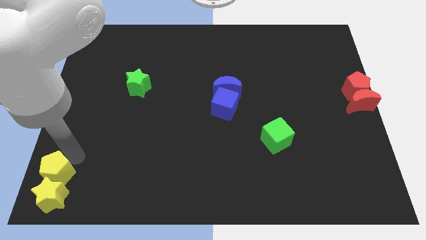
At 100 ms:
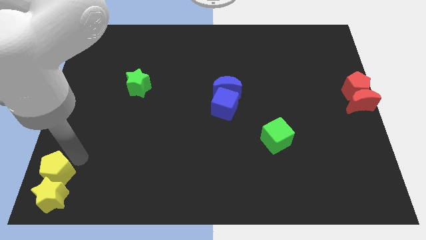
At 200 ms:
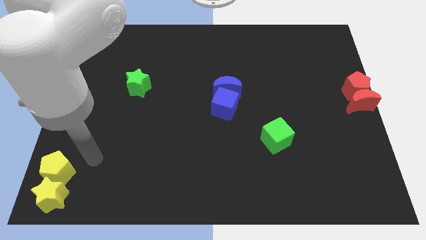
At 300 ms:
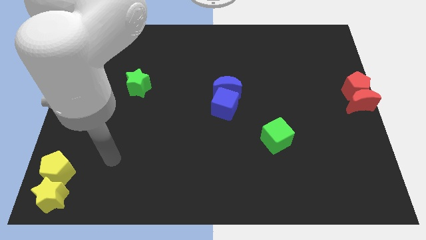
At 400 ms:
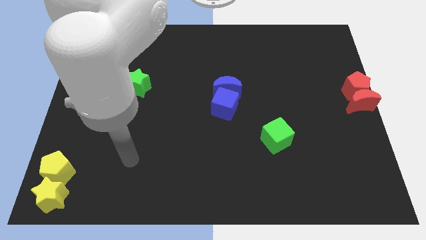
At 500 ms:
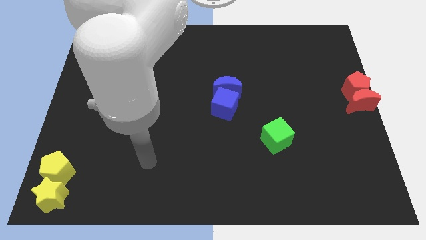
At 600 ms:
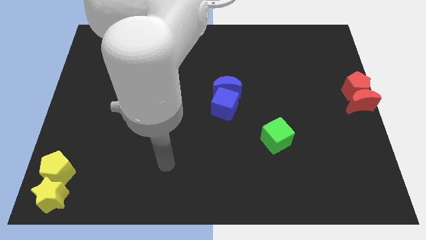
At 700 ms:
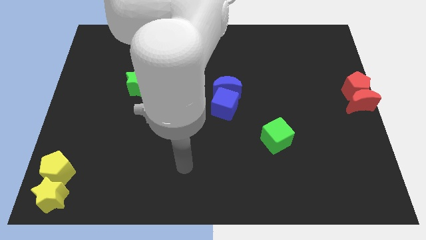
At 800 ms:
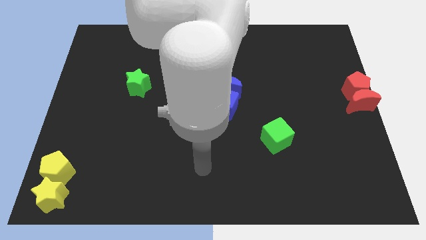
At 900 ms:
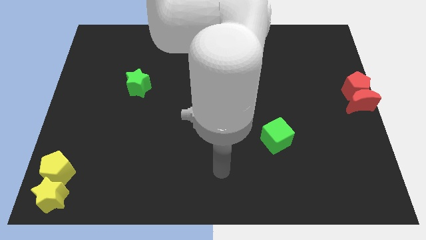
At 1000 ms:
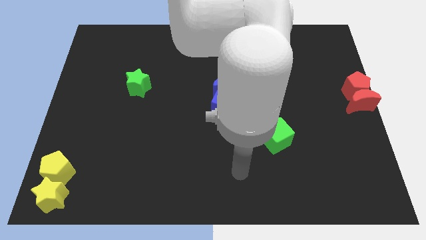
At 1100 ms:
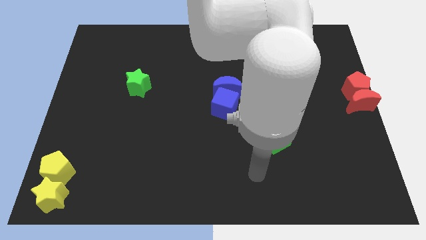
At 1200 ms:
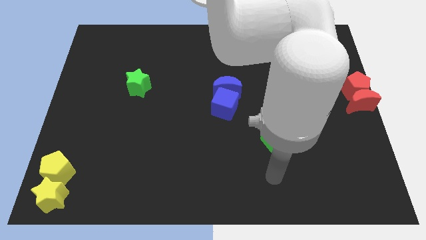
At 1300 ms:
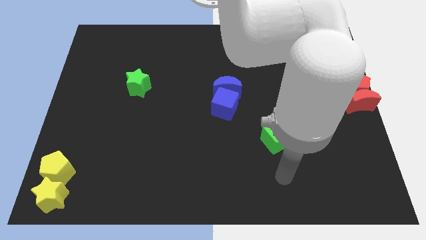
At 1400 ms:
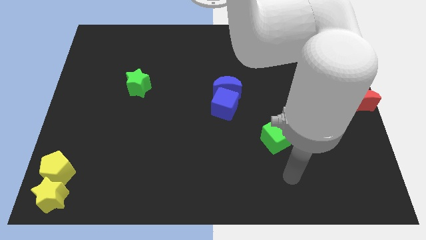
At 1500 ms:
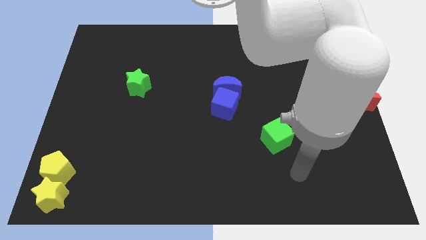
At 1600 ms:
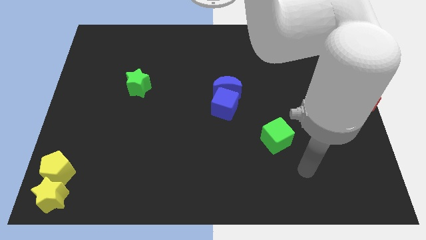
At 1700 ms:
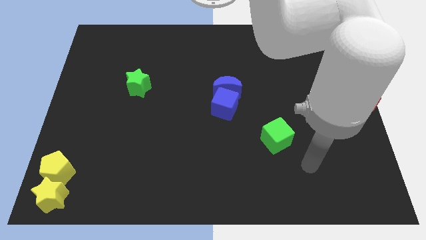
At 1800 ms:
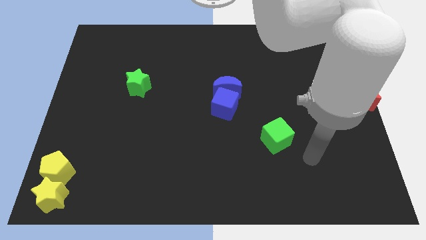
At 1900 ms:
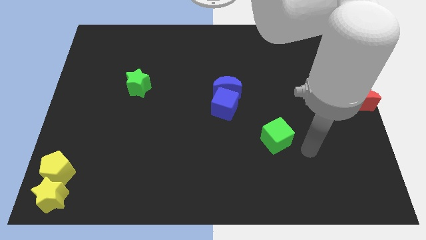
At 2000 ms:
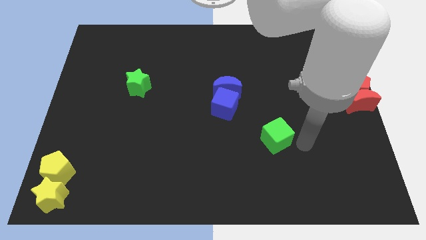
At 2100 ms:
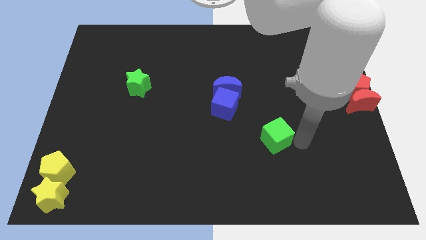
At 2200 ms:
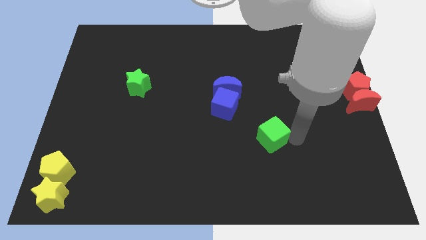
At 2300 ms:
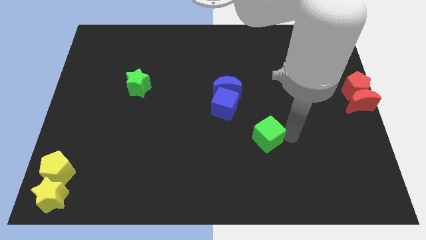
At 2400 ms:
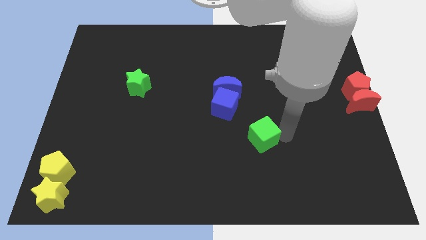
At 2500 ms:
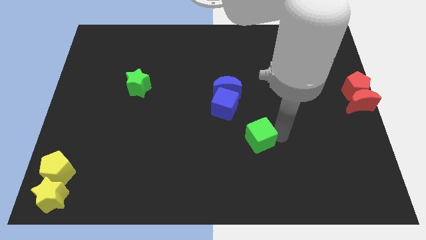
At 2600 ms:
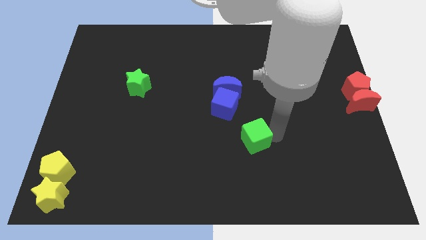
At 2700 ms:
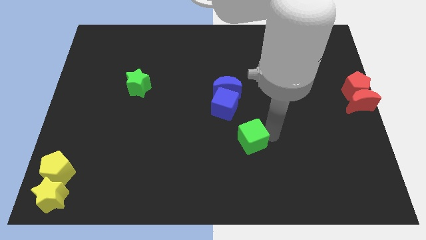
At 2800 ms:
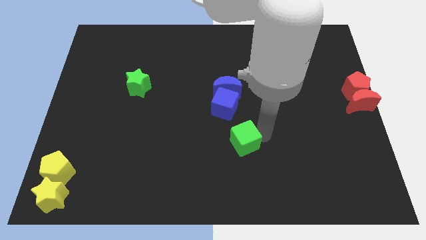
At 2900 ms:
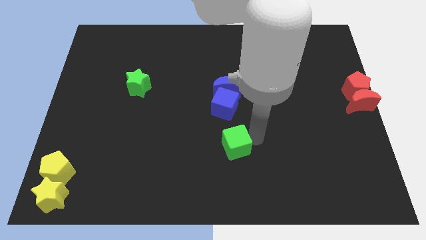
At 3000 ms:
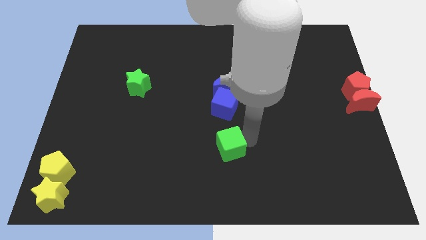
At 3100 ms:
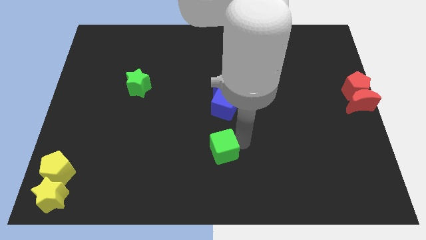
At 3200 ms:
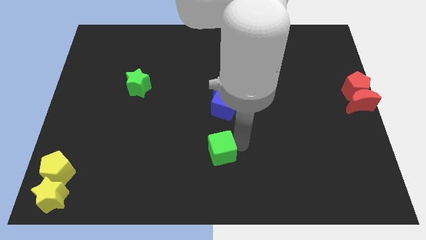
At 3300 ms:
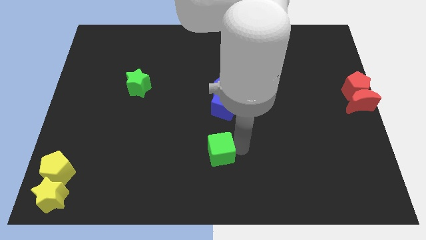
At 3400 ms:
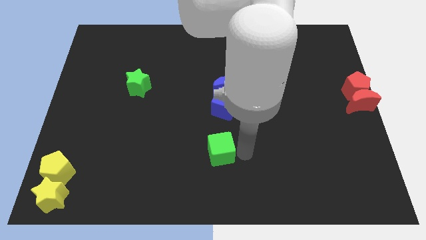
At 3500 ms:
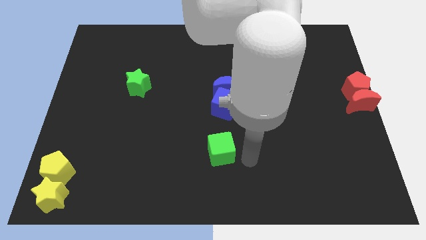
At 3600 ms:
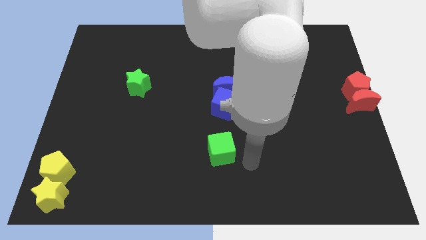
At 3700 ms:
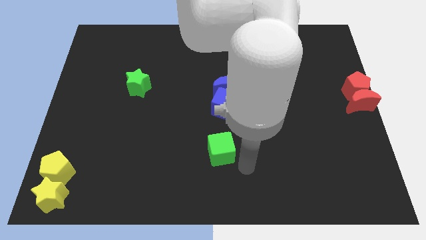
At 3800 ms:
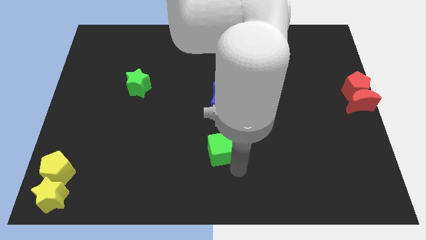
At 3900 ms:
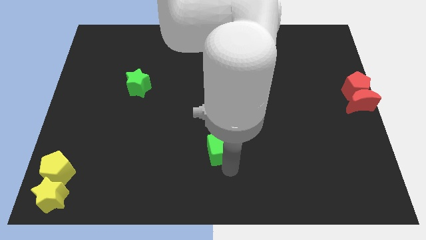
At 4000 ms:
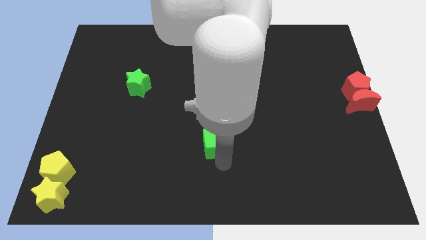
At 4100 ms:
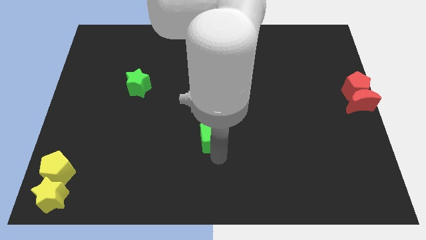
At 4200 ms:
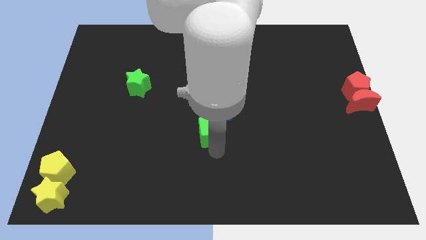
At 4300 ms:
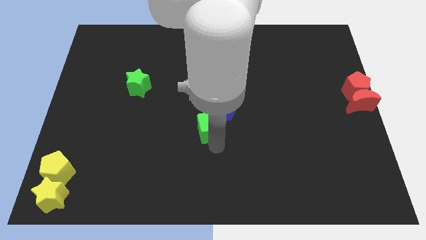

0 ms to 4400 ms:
place the green cube diagonally to green star

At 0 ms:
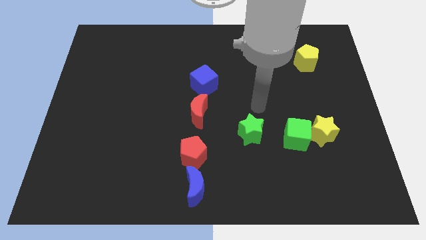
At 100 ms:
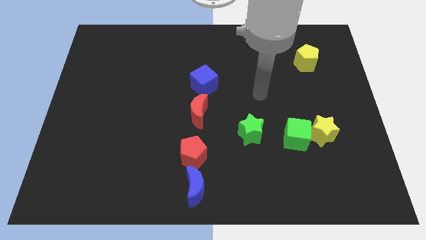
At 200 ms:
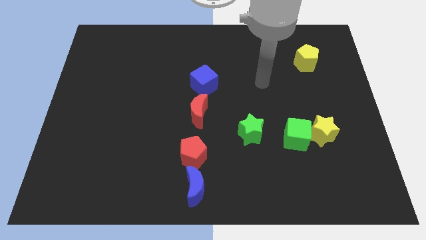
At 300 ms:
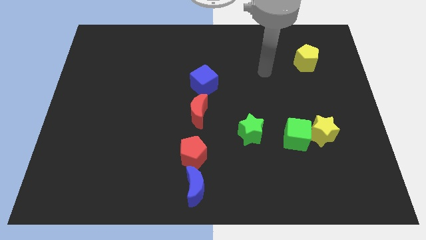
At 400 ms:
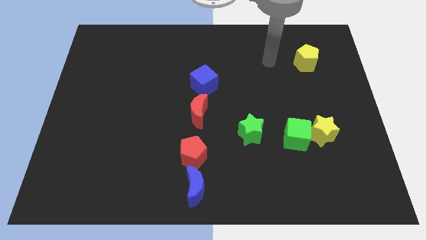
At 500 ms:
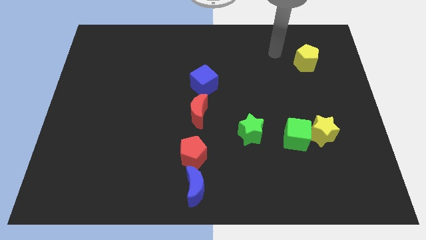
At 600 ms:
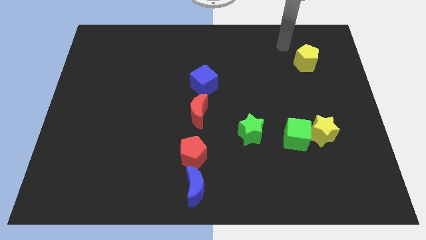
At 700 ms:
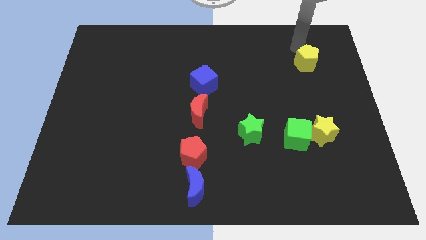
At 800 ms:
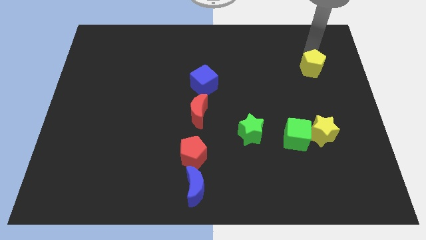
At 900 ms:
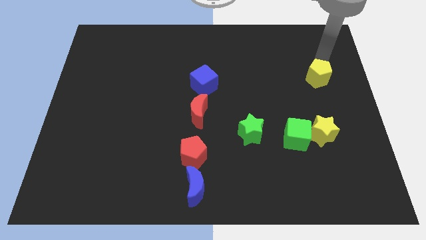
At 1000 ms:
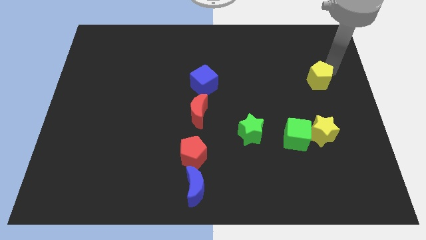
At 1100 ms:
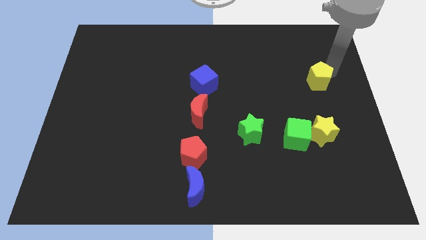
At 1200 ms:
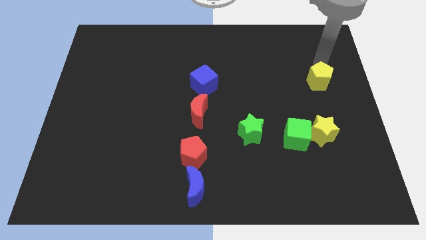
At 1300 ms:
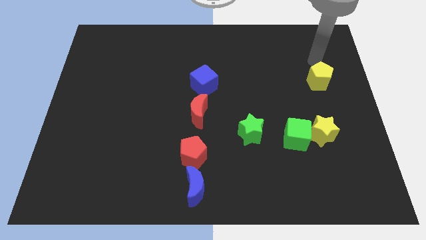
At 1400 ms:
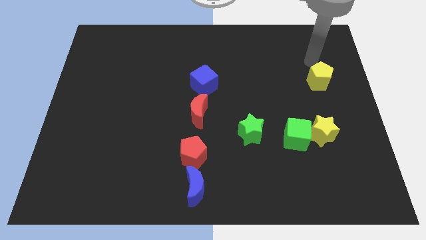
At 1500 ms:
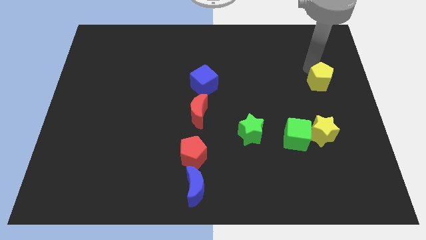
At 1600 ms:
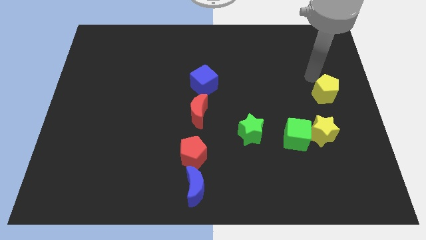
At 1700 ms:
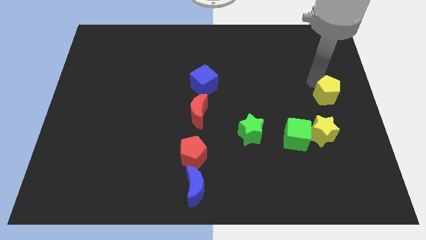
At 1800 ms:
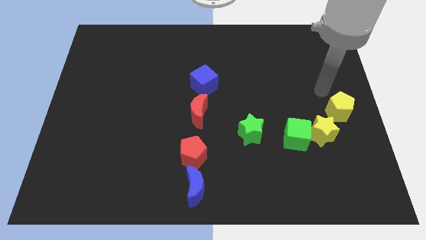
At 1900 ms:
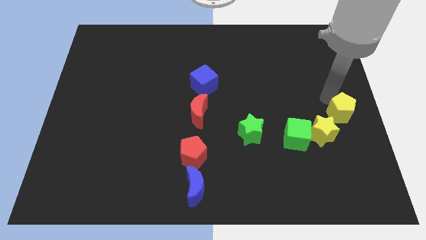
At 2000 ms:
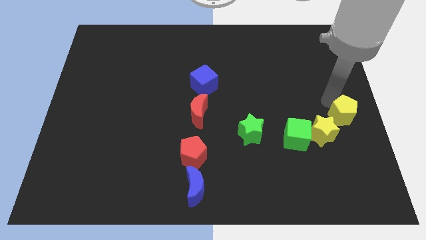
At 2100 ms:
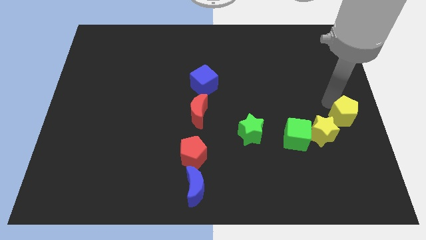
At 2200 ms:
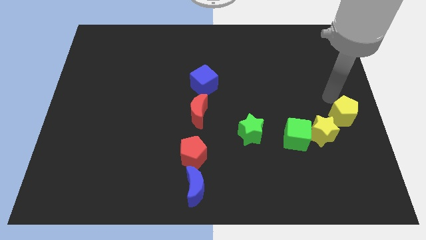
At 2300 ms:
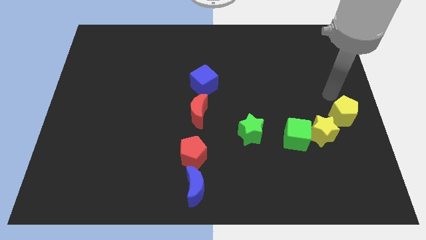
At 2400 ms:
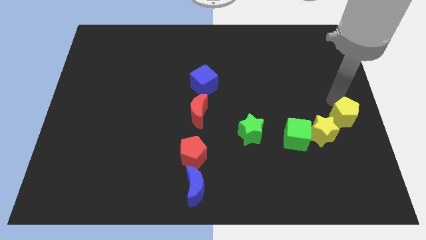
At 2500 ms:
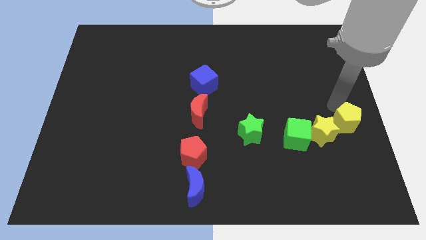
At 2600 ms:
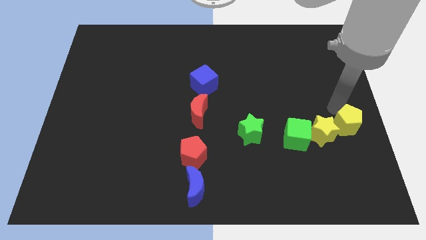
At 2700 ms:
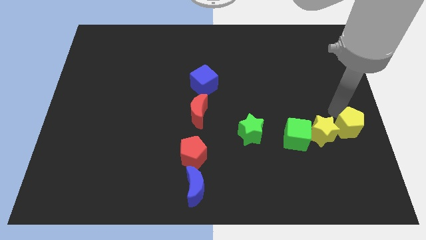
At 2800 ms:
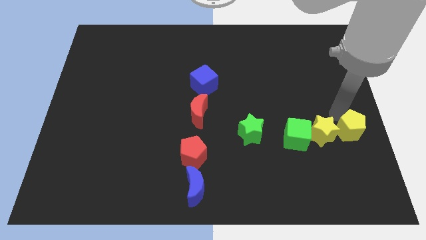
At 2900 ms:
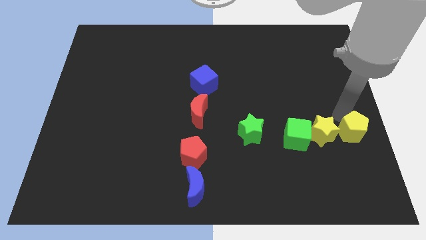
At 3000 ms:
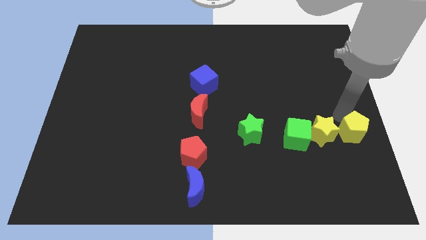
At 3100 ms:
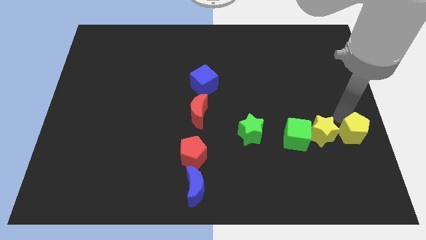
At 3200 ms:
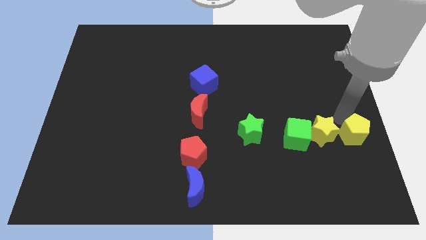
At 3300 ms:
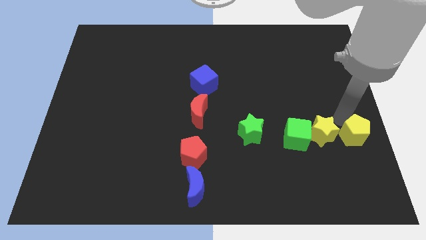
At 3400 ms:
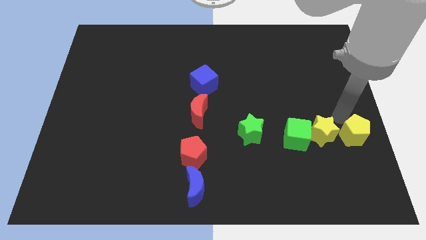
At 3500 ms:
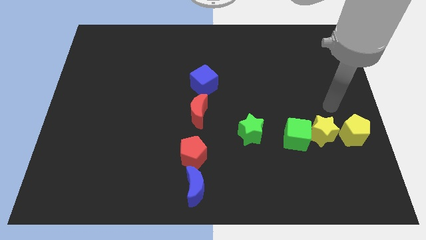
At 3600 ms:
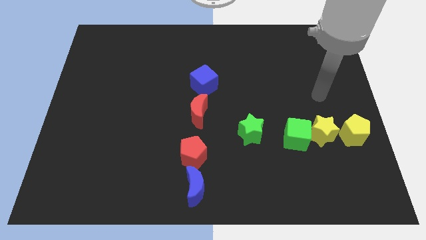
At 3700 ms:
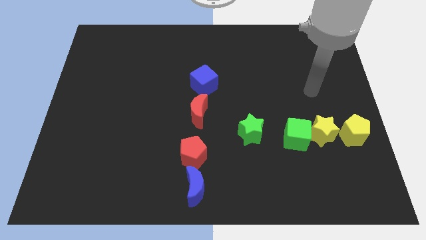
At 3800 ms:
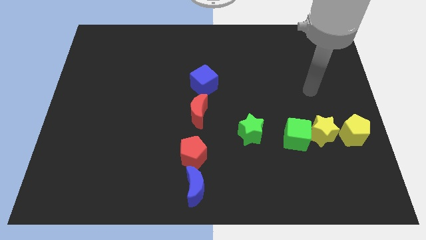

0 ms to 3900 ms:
move the yellow pentagon to the right side of the yellow star

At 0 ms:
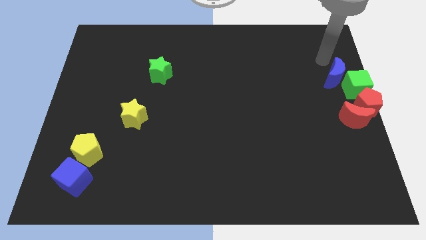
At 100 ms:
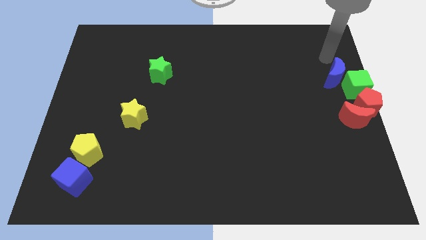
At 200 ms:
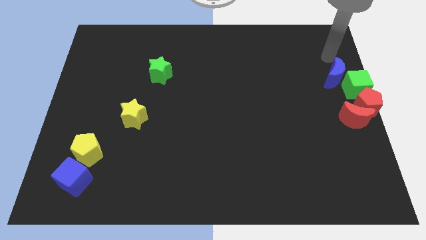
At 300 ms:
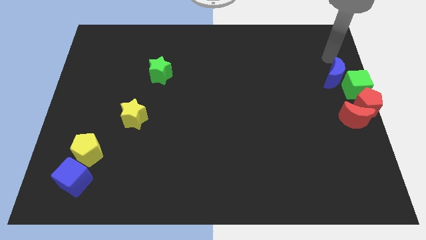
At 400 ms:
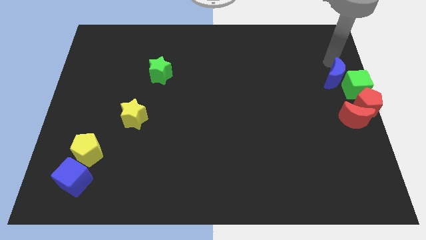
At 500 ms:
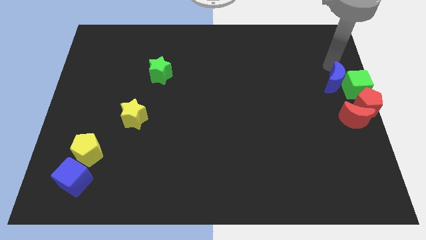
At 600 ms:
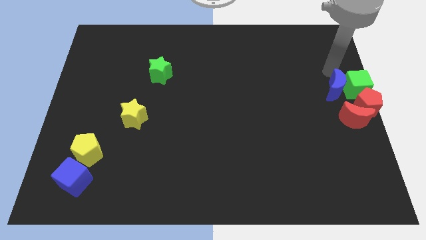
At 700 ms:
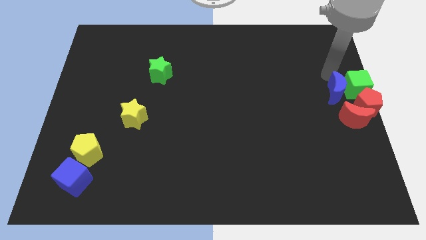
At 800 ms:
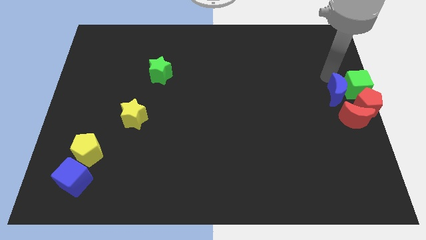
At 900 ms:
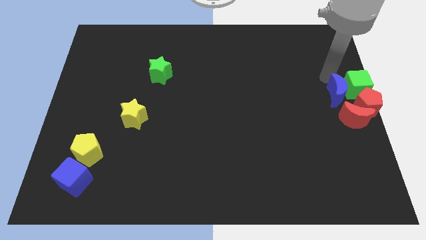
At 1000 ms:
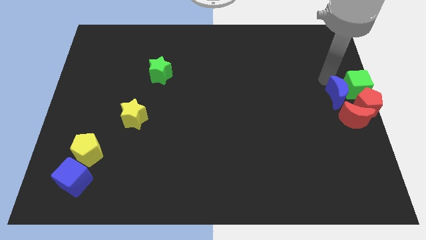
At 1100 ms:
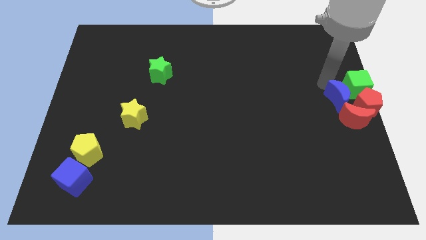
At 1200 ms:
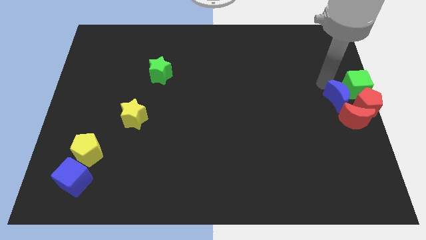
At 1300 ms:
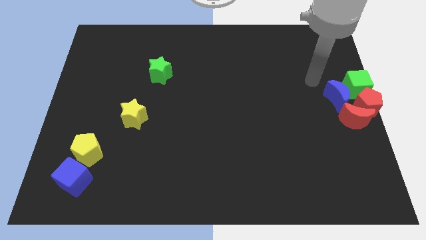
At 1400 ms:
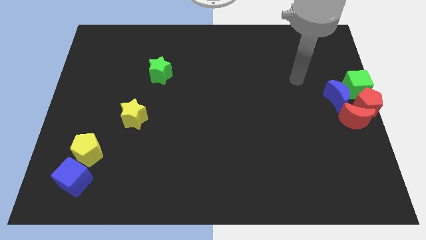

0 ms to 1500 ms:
place the blue moon above the red moon
